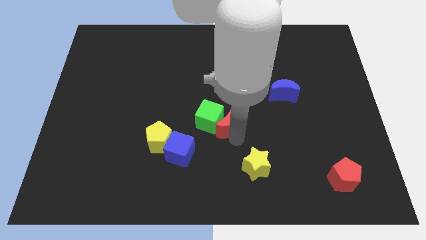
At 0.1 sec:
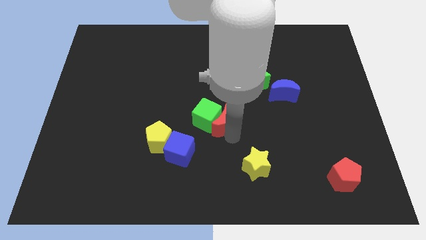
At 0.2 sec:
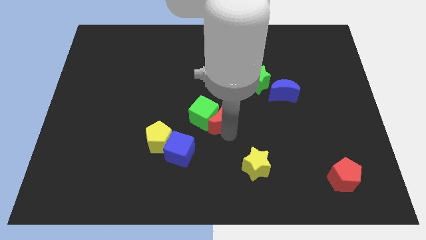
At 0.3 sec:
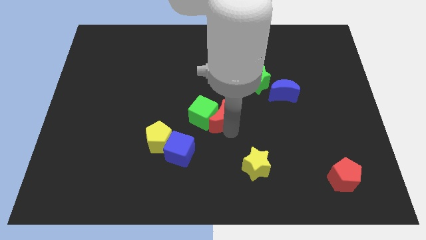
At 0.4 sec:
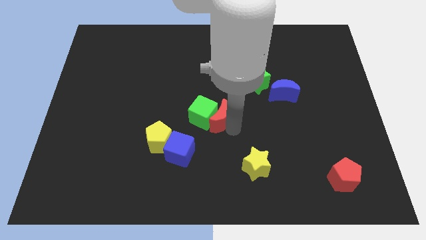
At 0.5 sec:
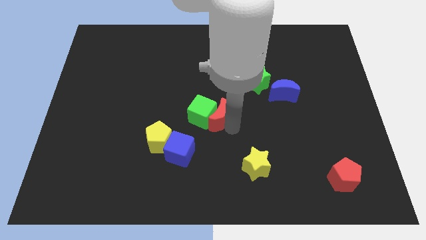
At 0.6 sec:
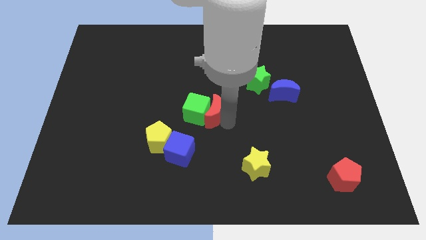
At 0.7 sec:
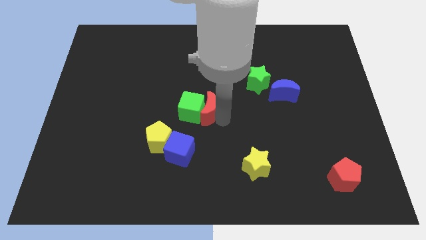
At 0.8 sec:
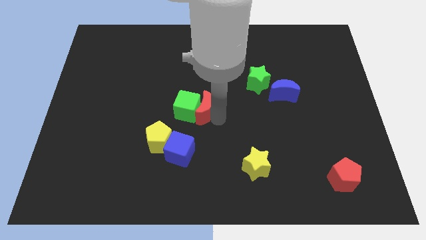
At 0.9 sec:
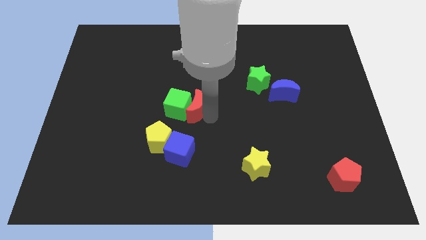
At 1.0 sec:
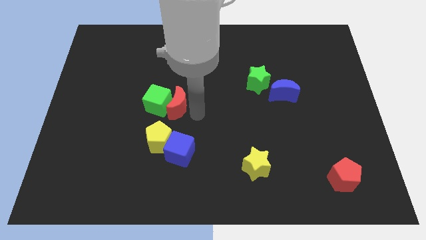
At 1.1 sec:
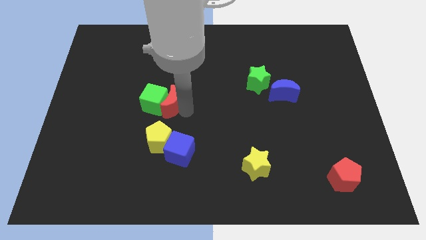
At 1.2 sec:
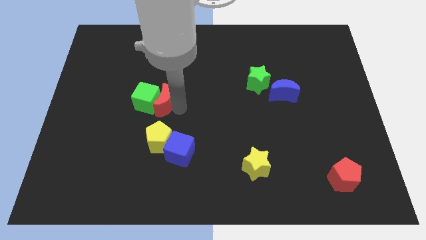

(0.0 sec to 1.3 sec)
push green cube and red moon towards left

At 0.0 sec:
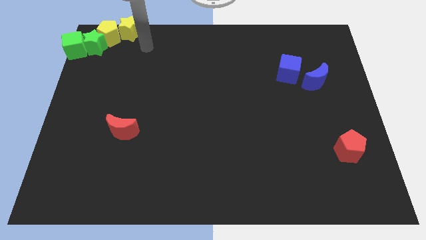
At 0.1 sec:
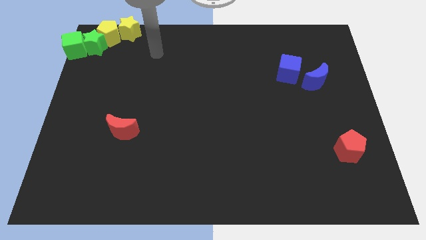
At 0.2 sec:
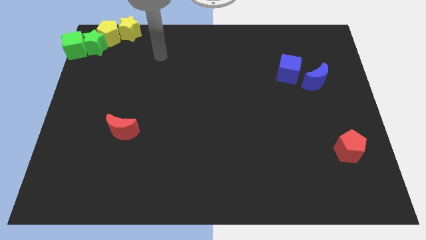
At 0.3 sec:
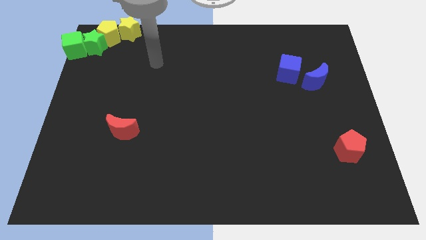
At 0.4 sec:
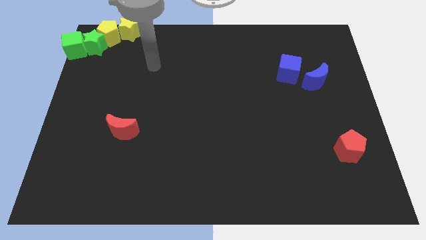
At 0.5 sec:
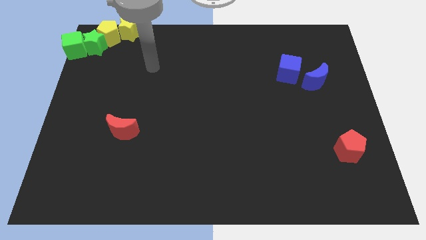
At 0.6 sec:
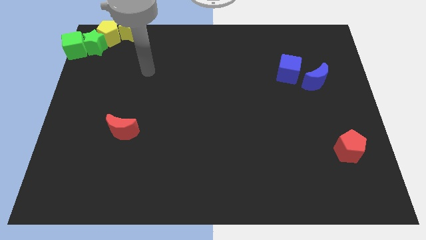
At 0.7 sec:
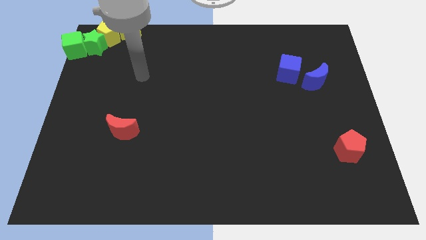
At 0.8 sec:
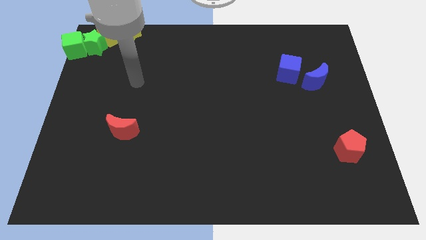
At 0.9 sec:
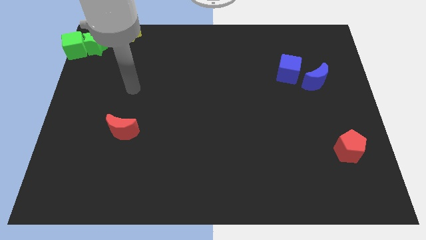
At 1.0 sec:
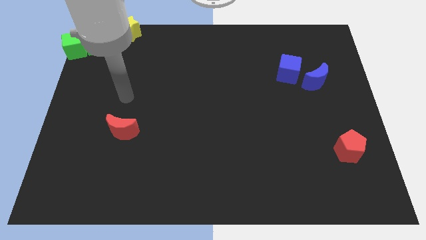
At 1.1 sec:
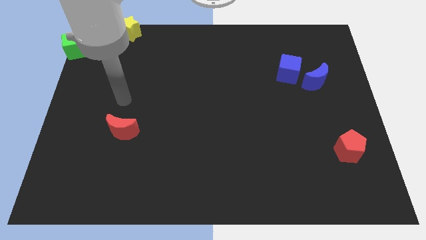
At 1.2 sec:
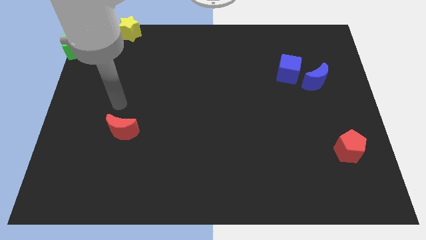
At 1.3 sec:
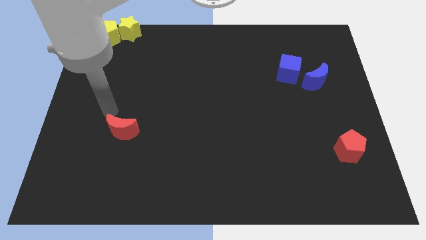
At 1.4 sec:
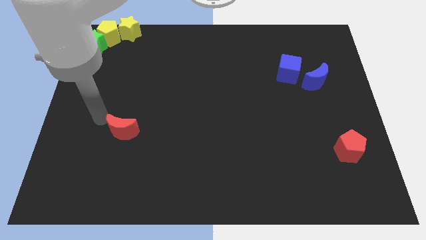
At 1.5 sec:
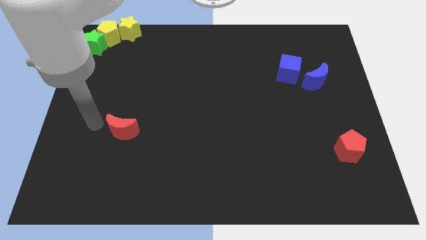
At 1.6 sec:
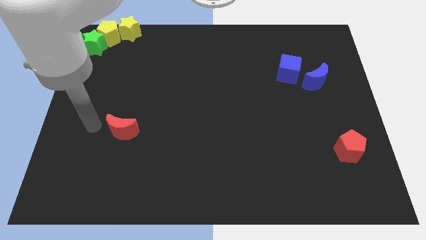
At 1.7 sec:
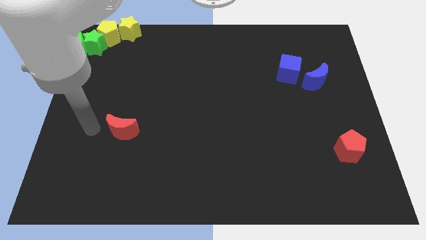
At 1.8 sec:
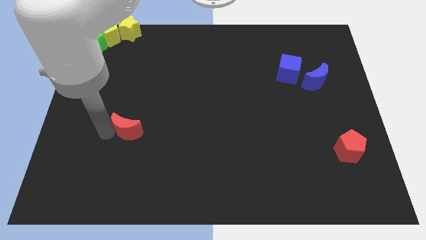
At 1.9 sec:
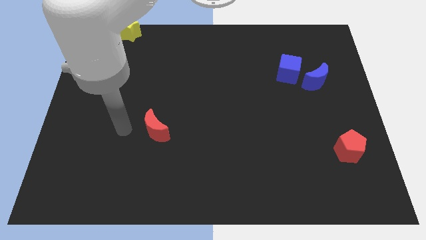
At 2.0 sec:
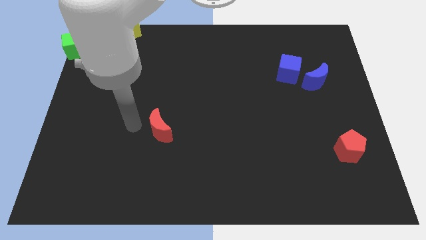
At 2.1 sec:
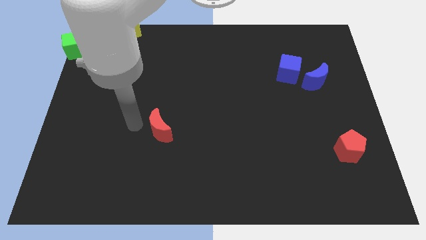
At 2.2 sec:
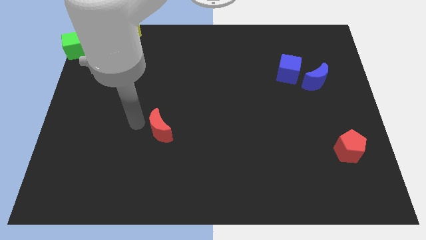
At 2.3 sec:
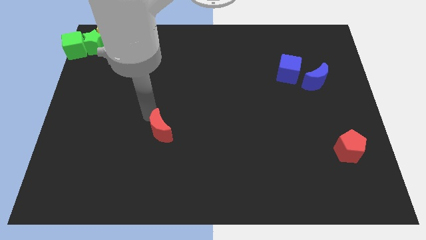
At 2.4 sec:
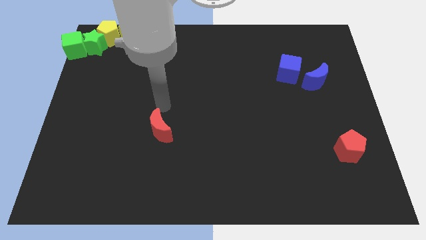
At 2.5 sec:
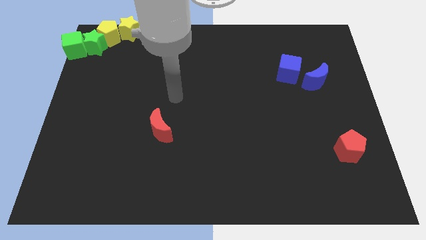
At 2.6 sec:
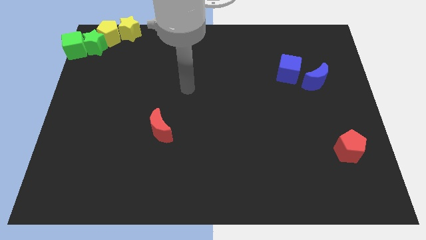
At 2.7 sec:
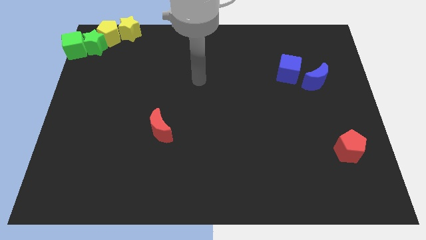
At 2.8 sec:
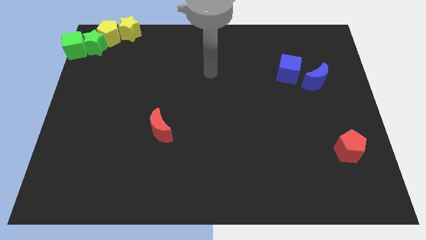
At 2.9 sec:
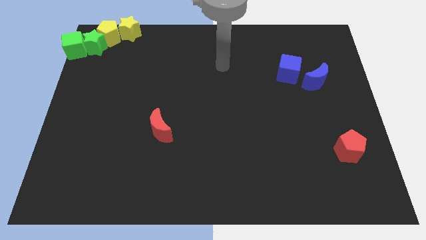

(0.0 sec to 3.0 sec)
push the red crescent slightly to the right

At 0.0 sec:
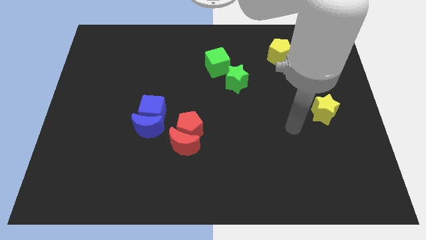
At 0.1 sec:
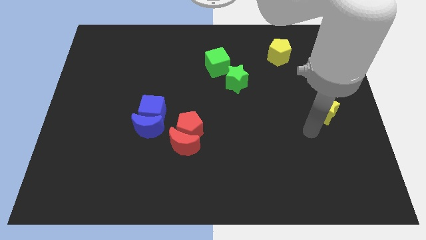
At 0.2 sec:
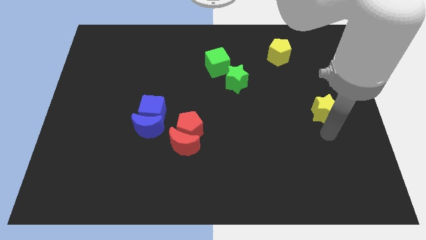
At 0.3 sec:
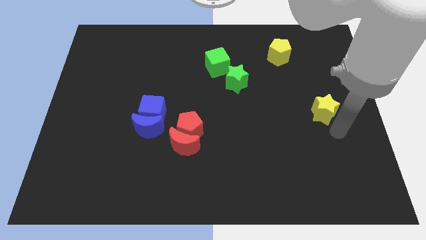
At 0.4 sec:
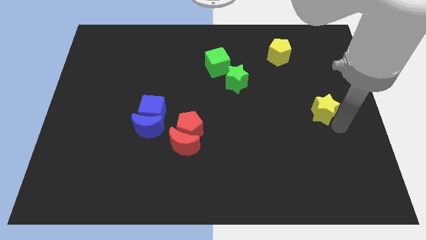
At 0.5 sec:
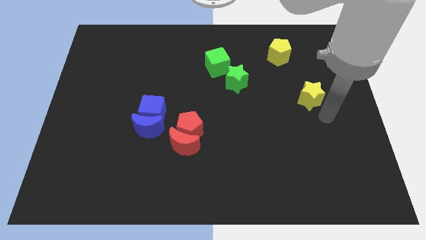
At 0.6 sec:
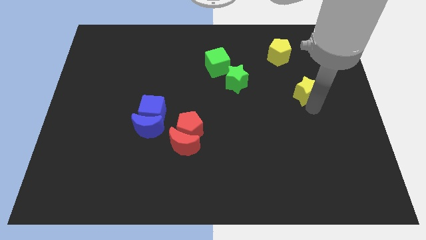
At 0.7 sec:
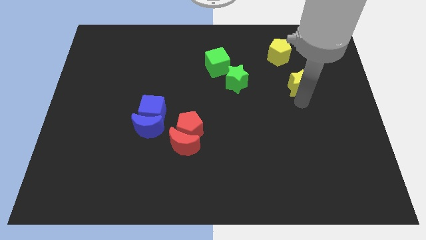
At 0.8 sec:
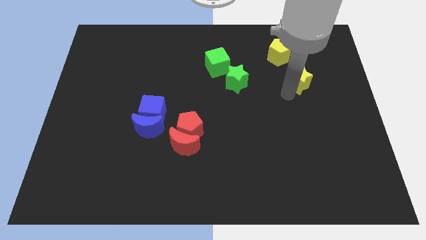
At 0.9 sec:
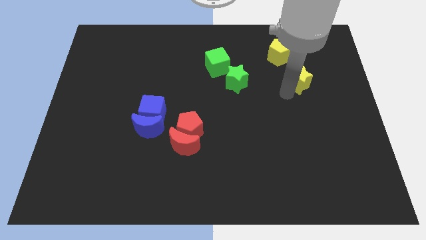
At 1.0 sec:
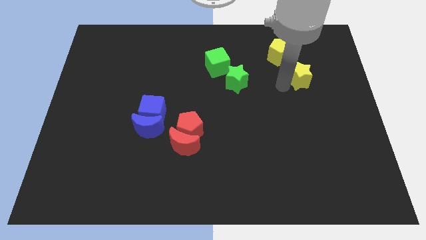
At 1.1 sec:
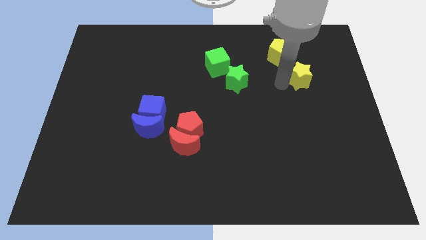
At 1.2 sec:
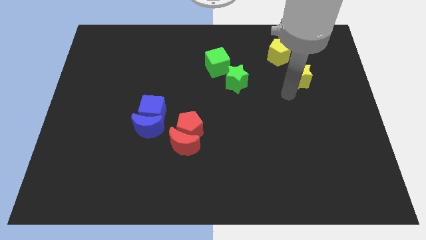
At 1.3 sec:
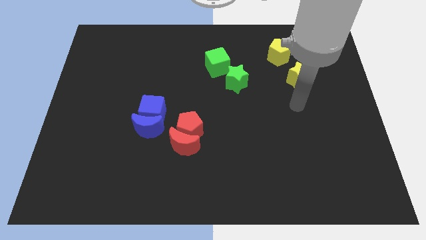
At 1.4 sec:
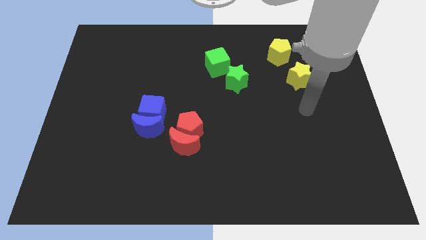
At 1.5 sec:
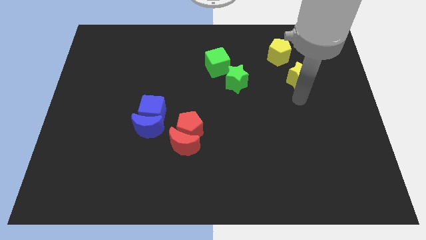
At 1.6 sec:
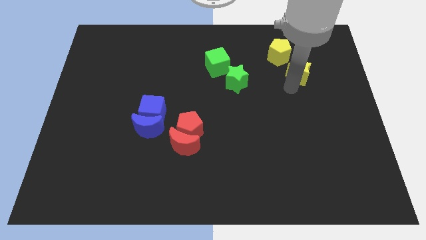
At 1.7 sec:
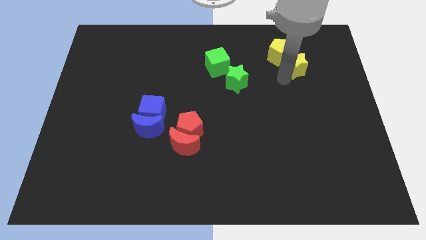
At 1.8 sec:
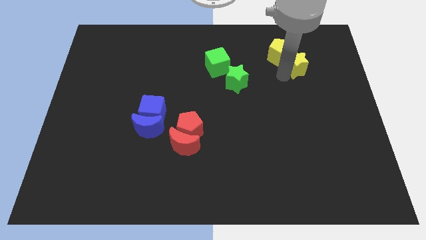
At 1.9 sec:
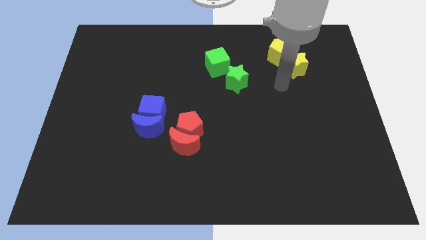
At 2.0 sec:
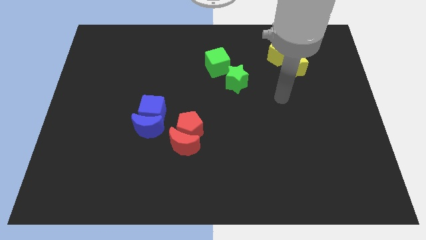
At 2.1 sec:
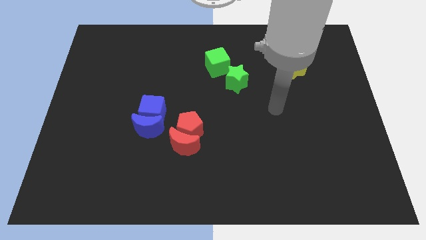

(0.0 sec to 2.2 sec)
slide yellow star close to yellow pentagon

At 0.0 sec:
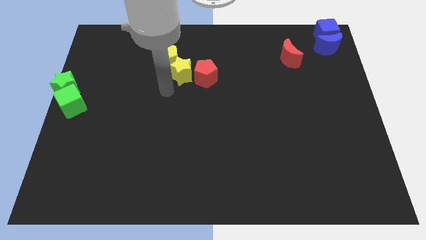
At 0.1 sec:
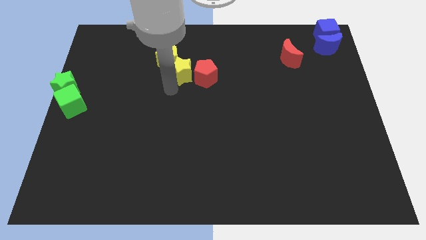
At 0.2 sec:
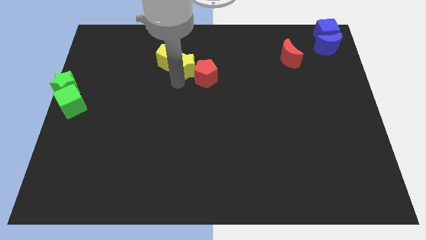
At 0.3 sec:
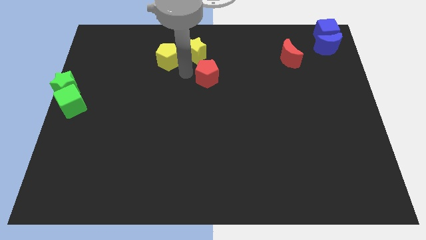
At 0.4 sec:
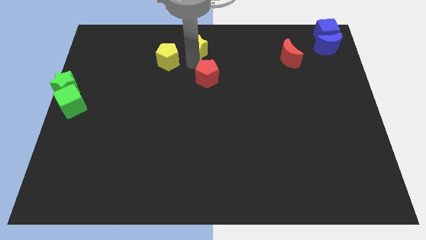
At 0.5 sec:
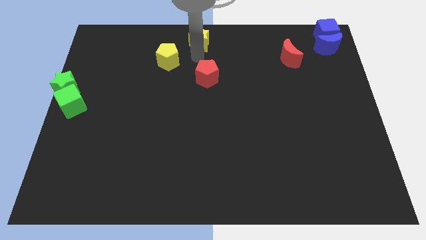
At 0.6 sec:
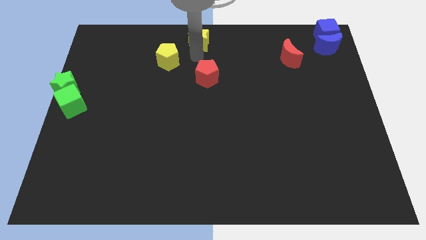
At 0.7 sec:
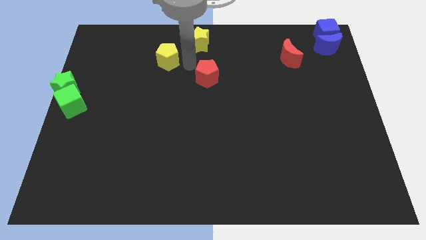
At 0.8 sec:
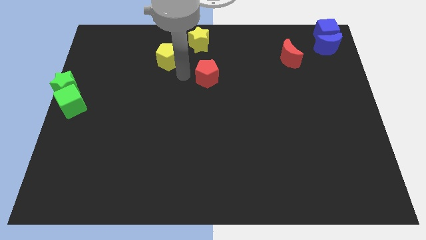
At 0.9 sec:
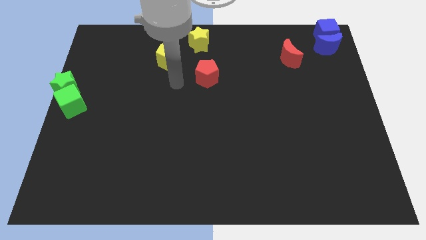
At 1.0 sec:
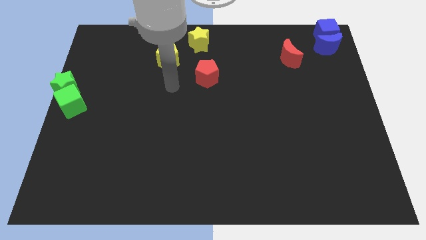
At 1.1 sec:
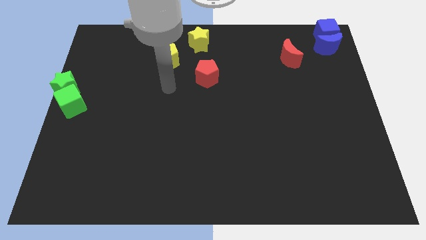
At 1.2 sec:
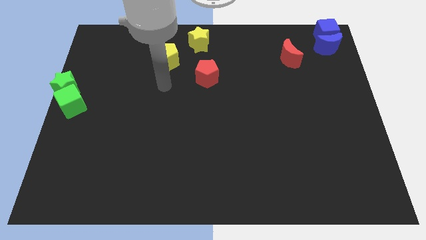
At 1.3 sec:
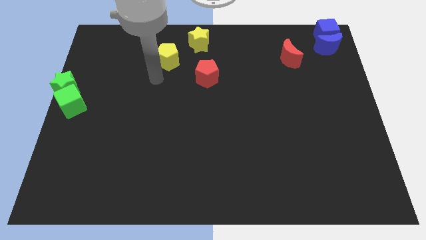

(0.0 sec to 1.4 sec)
place the yellow star above the red pentagon

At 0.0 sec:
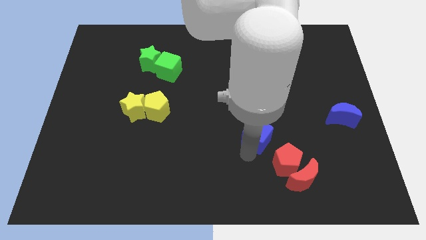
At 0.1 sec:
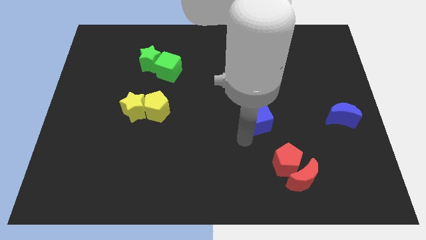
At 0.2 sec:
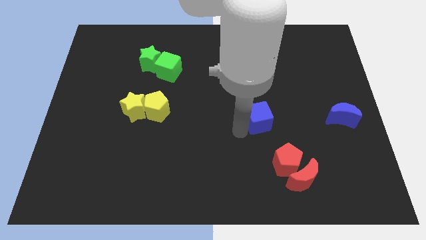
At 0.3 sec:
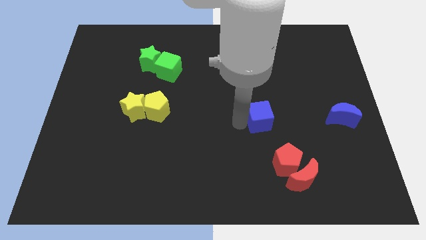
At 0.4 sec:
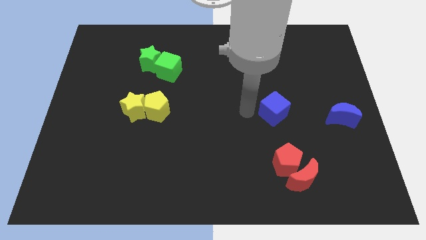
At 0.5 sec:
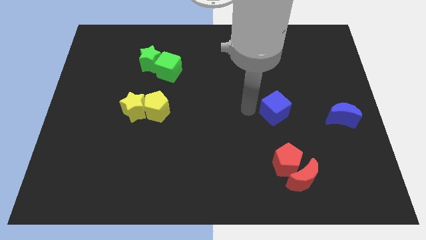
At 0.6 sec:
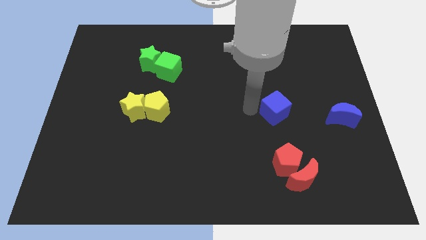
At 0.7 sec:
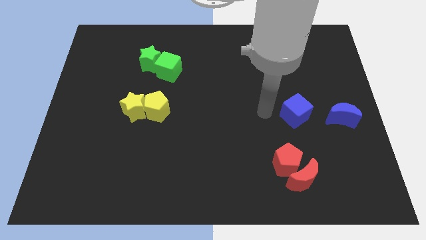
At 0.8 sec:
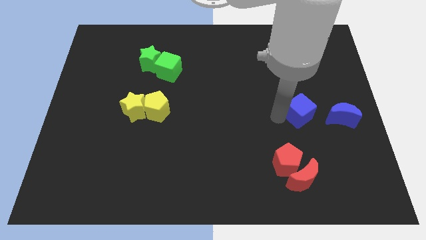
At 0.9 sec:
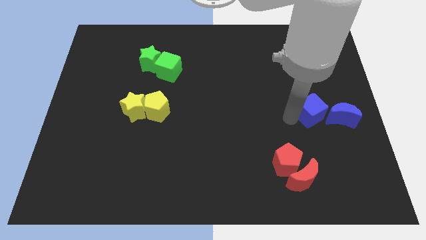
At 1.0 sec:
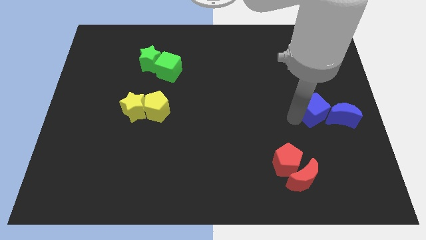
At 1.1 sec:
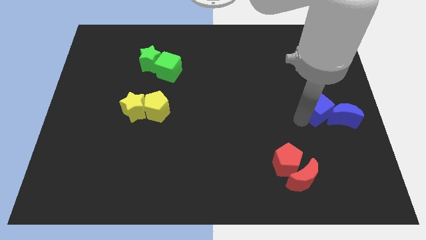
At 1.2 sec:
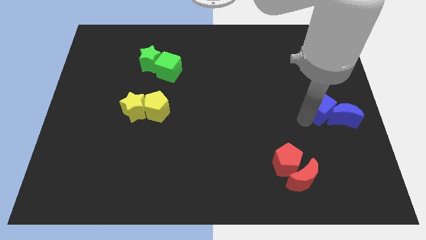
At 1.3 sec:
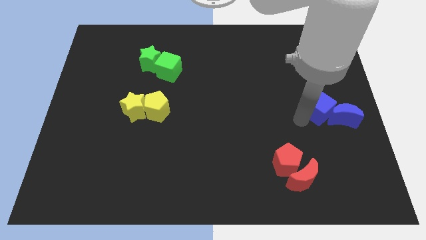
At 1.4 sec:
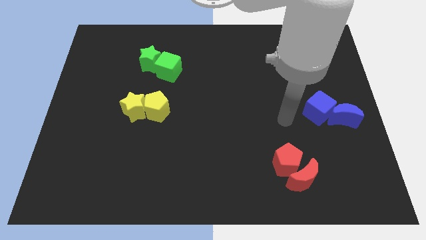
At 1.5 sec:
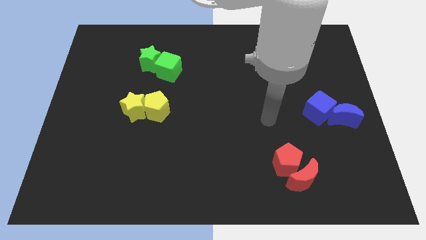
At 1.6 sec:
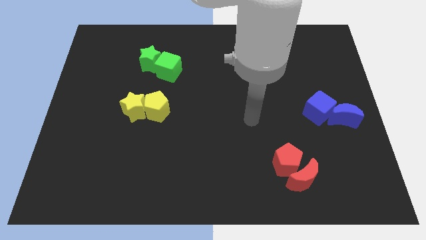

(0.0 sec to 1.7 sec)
place the blue cube left to blue crescent
